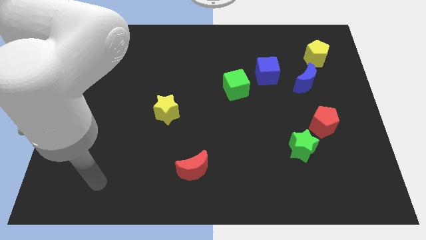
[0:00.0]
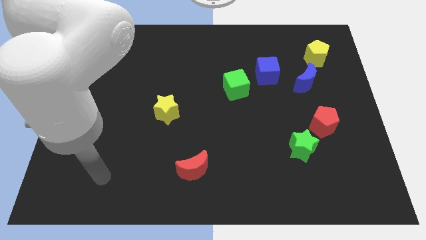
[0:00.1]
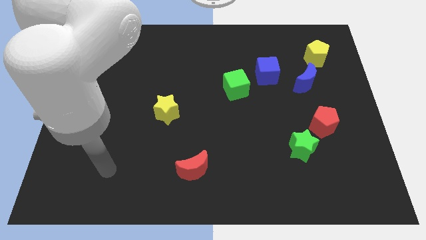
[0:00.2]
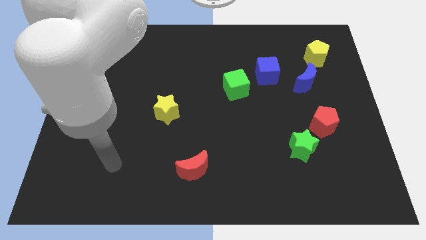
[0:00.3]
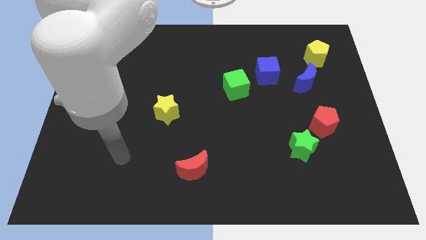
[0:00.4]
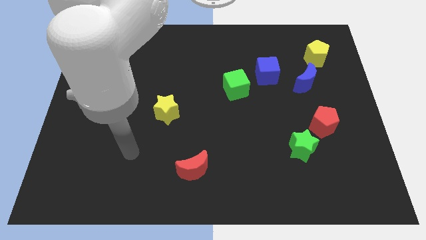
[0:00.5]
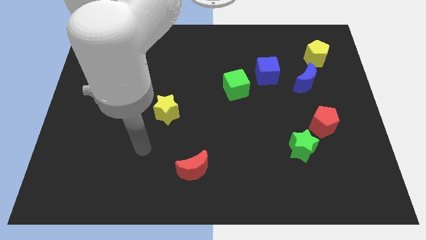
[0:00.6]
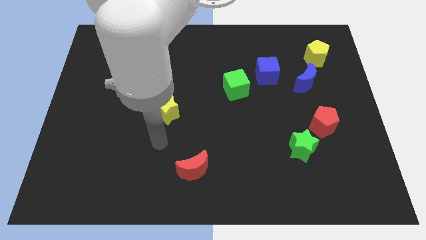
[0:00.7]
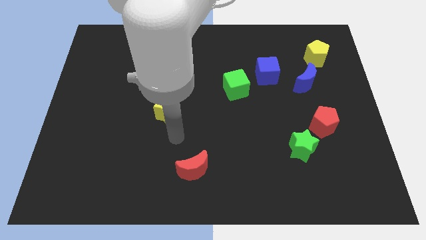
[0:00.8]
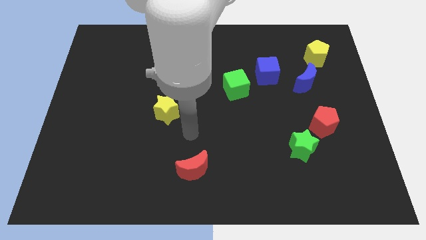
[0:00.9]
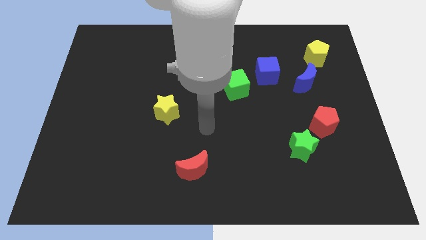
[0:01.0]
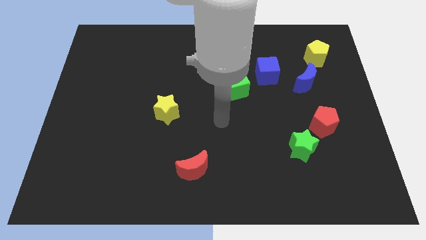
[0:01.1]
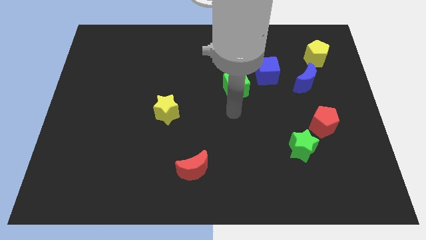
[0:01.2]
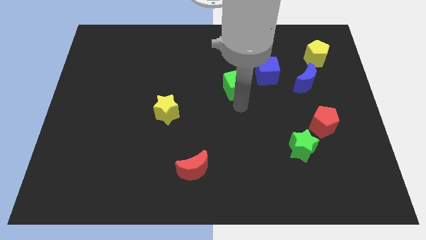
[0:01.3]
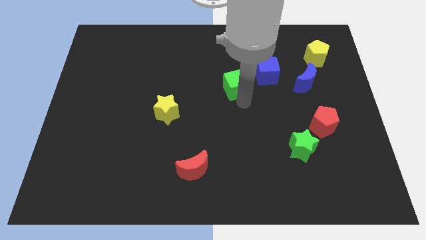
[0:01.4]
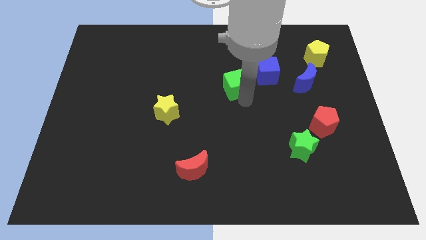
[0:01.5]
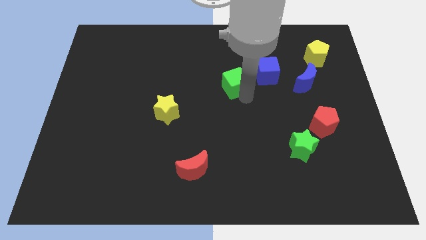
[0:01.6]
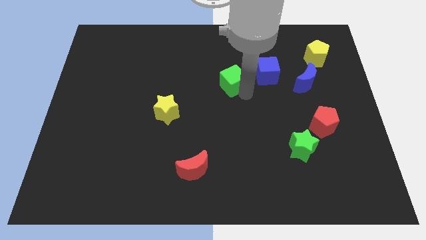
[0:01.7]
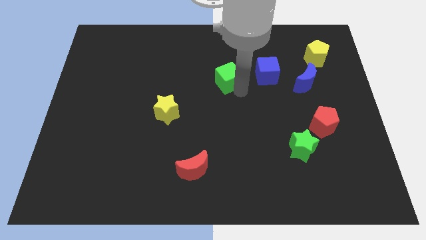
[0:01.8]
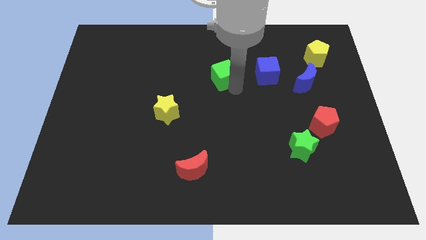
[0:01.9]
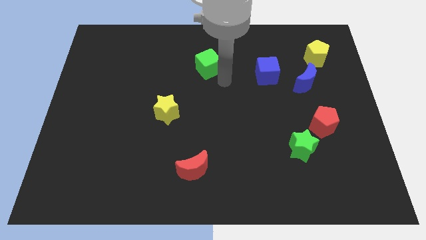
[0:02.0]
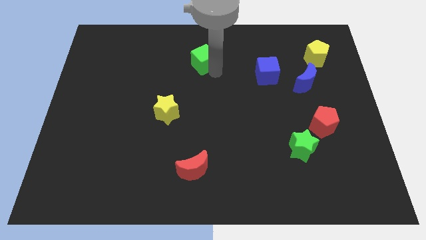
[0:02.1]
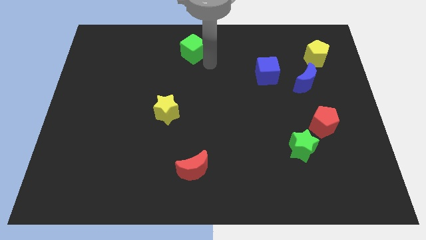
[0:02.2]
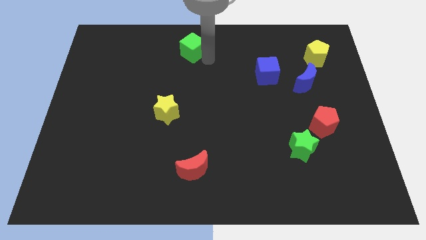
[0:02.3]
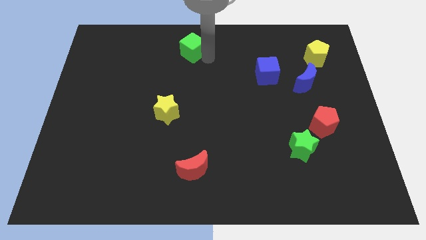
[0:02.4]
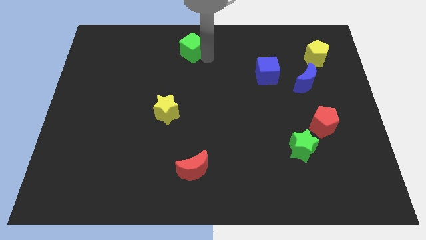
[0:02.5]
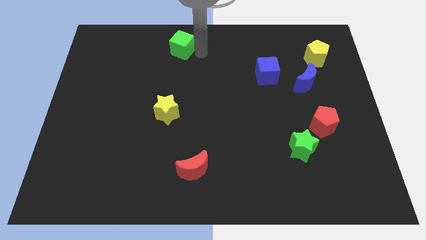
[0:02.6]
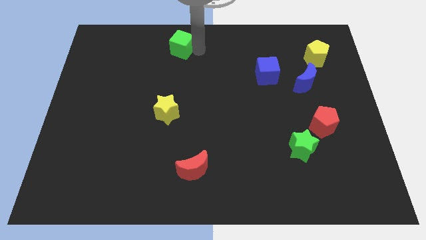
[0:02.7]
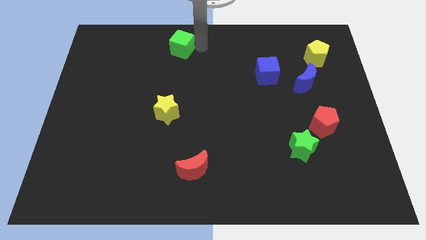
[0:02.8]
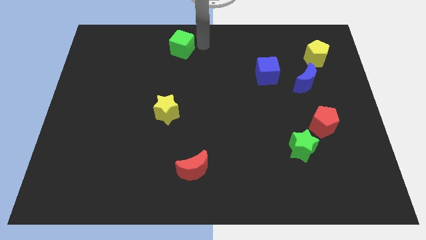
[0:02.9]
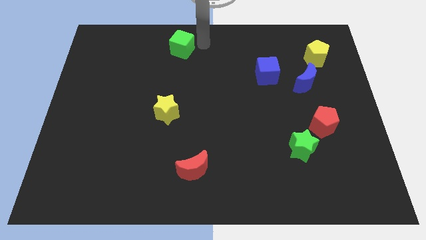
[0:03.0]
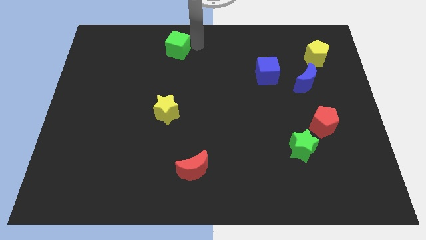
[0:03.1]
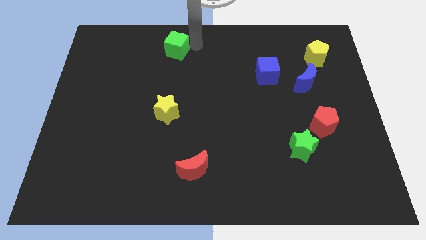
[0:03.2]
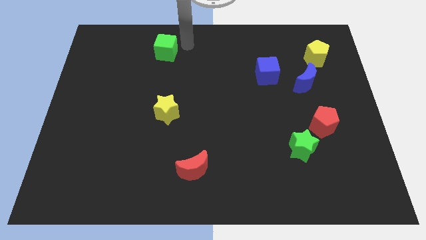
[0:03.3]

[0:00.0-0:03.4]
place the green cube above the yellow star

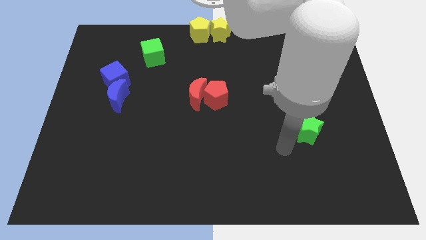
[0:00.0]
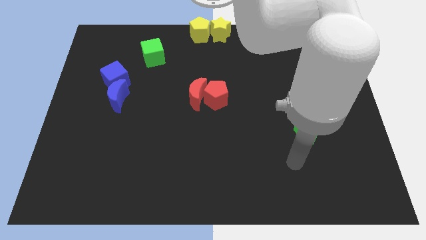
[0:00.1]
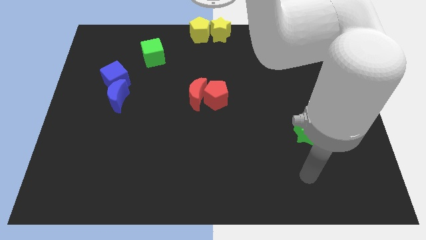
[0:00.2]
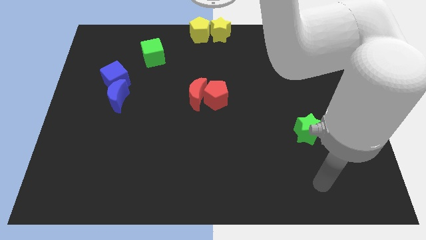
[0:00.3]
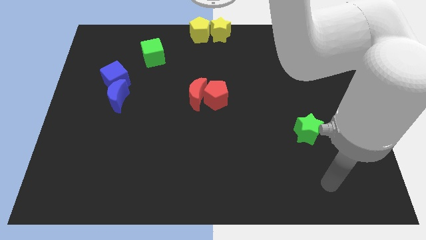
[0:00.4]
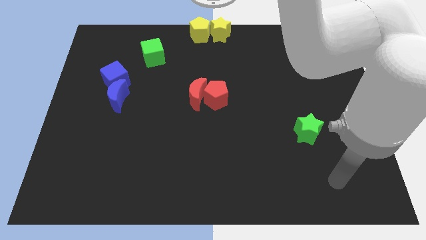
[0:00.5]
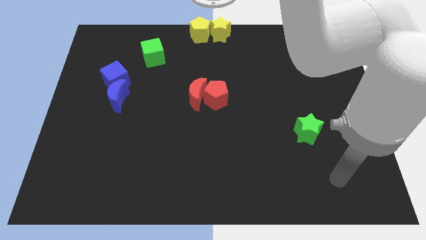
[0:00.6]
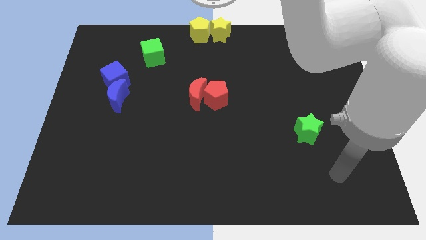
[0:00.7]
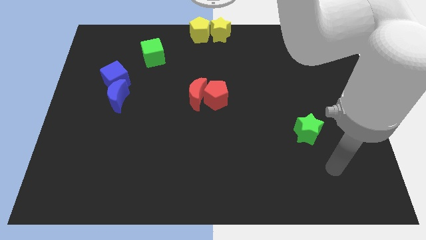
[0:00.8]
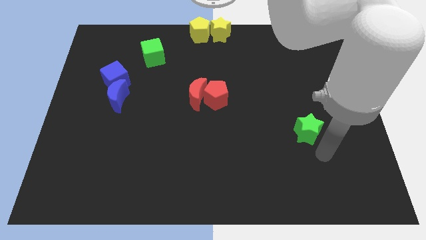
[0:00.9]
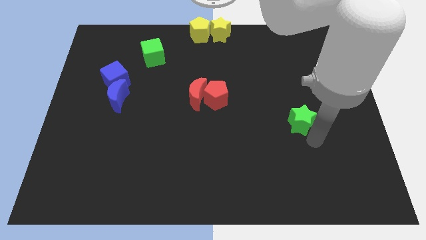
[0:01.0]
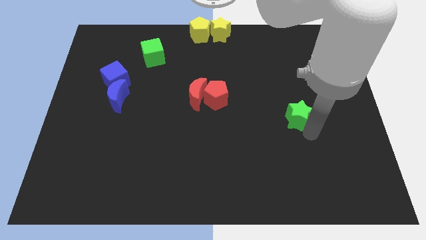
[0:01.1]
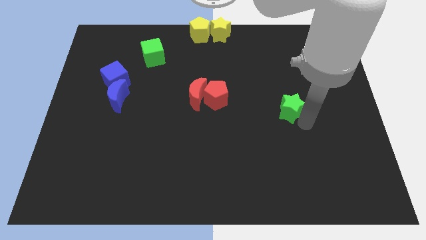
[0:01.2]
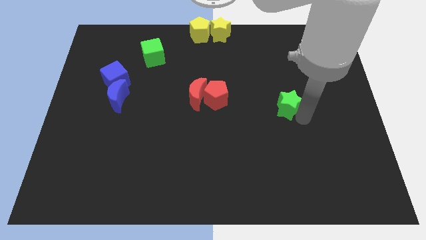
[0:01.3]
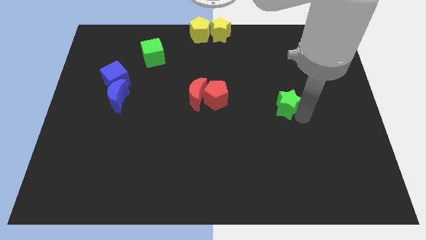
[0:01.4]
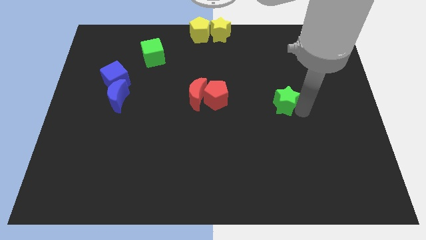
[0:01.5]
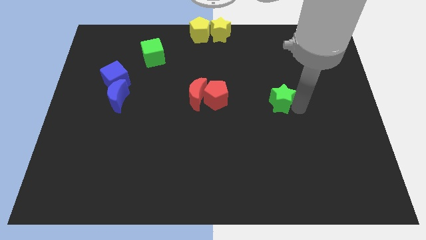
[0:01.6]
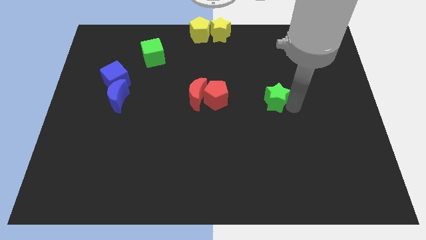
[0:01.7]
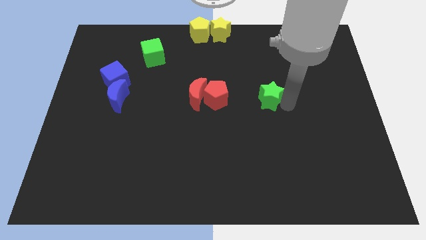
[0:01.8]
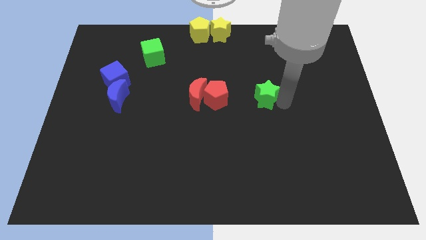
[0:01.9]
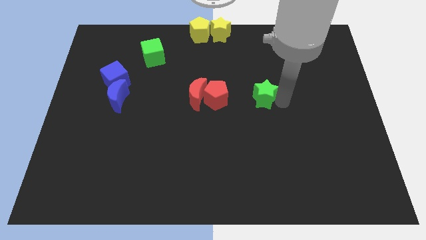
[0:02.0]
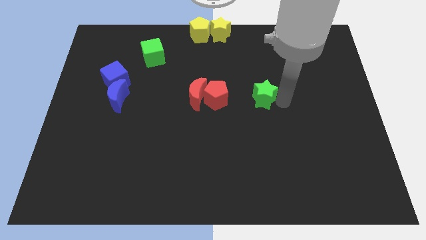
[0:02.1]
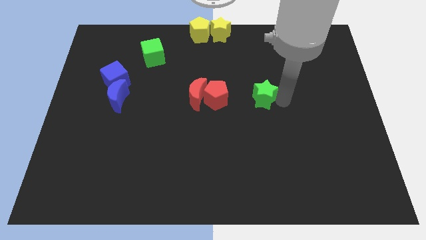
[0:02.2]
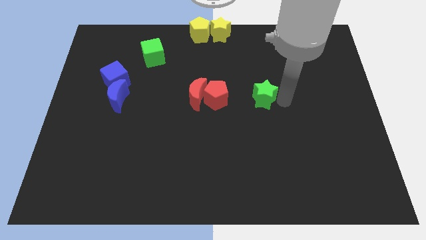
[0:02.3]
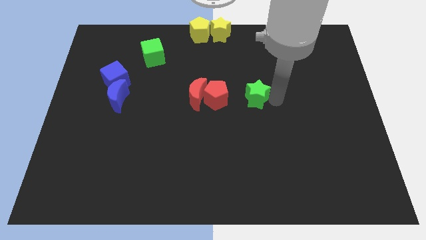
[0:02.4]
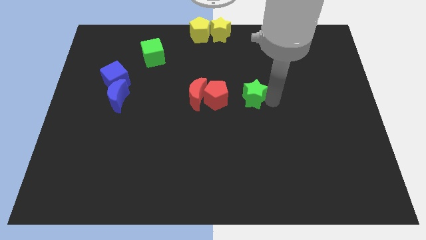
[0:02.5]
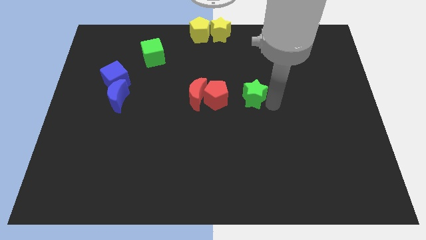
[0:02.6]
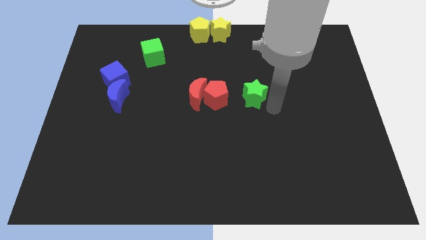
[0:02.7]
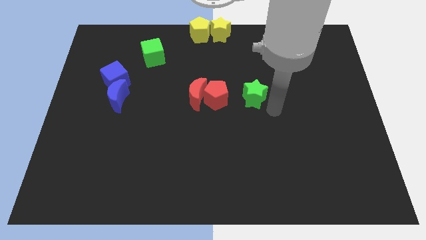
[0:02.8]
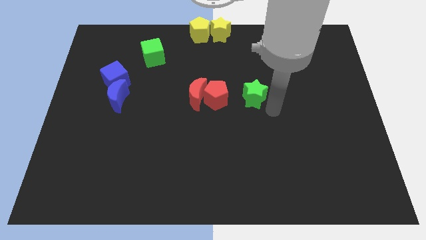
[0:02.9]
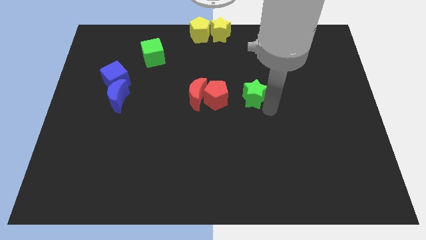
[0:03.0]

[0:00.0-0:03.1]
put green star to the right of red pentagon

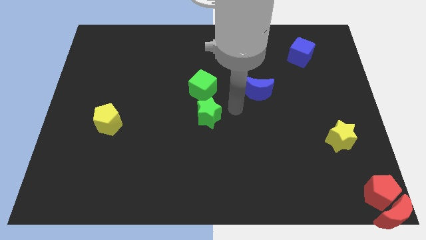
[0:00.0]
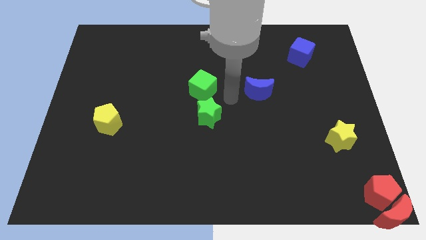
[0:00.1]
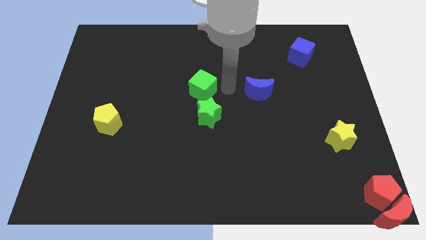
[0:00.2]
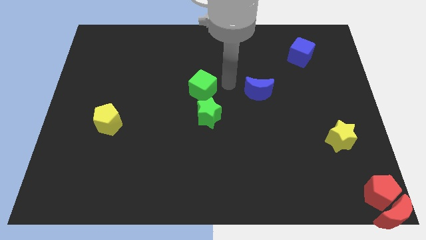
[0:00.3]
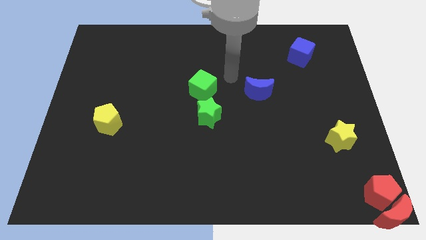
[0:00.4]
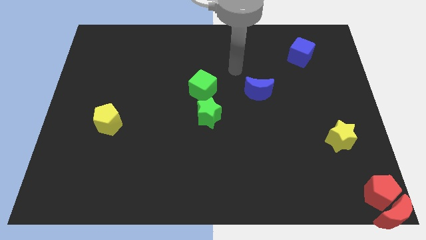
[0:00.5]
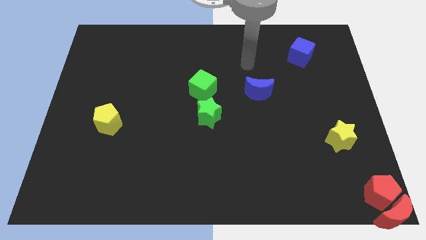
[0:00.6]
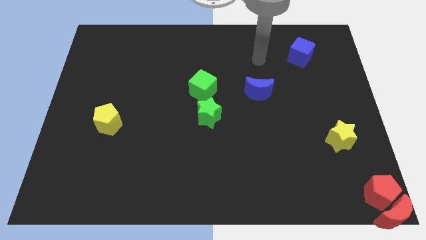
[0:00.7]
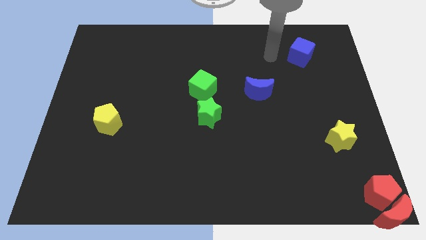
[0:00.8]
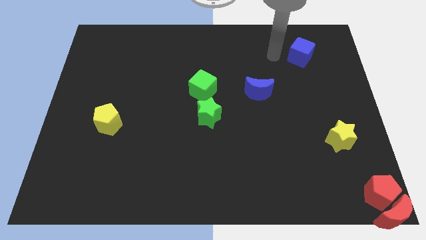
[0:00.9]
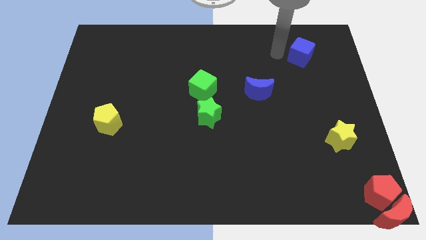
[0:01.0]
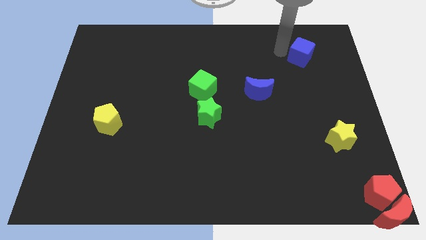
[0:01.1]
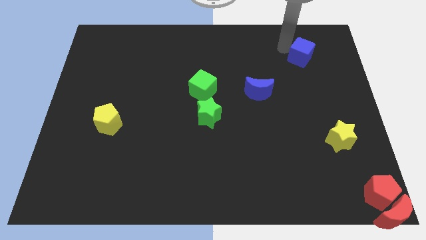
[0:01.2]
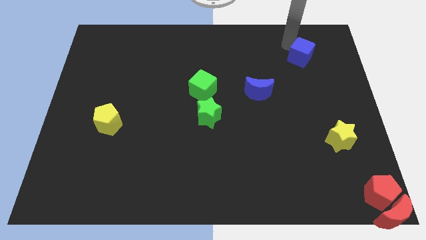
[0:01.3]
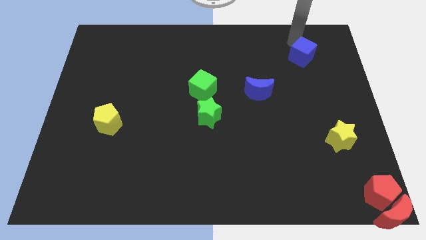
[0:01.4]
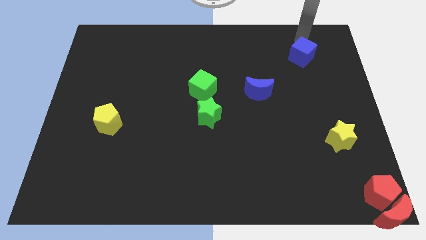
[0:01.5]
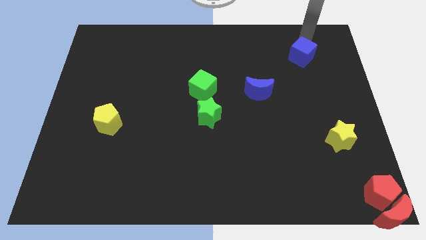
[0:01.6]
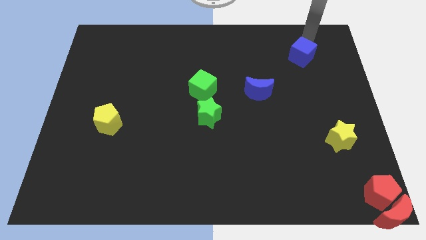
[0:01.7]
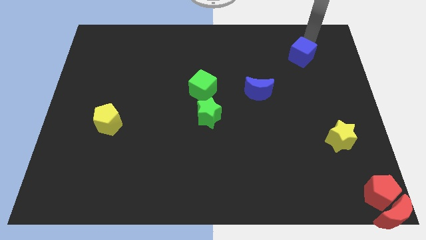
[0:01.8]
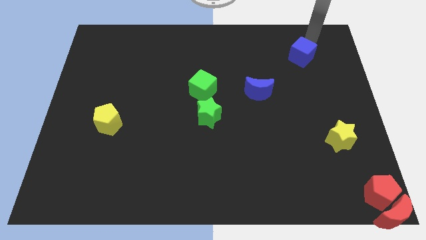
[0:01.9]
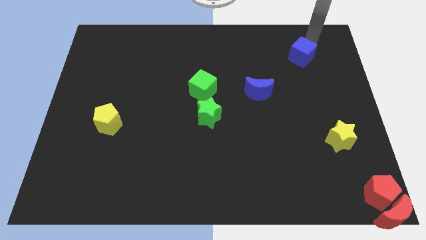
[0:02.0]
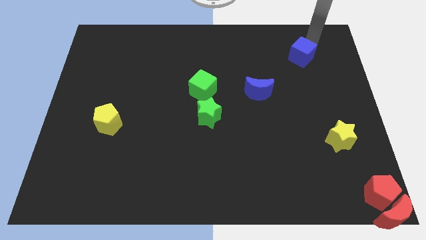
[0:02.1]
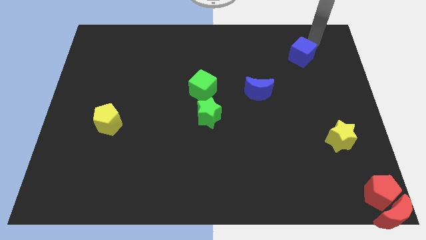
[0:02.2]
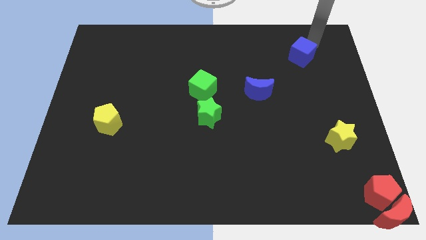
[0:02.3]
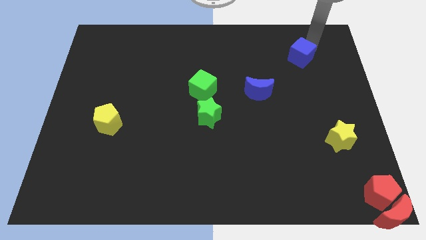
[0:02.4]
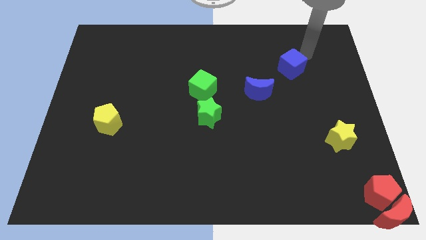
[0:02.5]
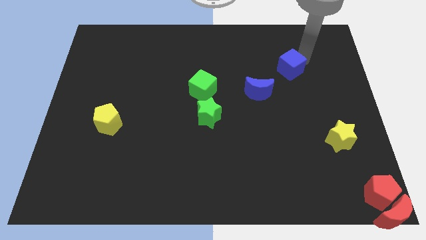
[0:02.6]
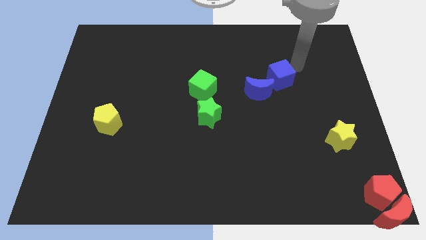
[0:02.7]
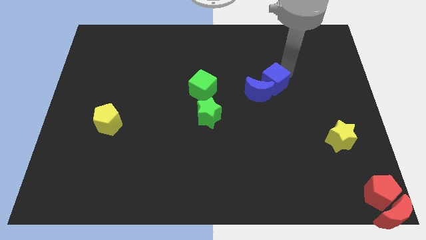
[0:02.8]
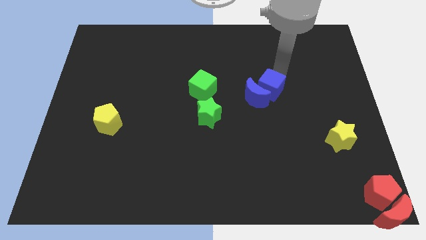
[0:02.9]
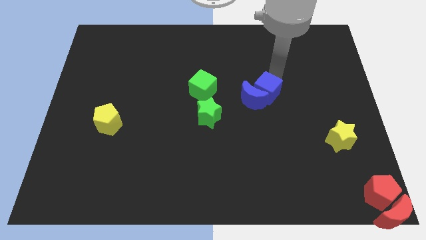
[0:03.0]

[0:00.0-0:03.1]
push the blue cube into the blue crescent
